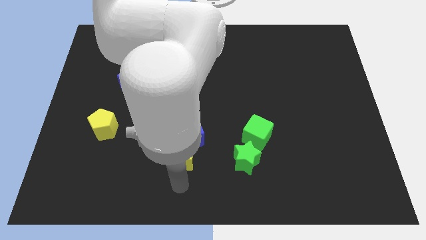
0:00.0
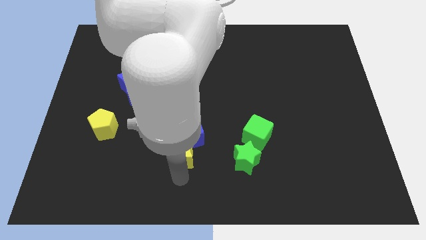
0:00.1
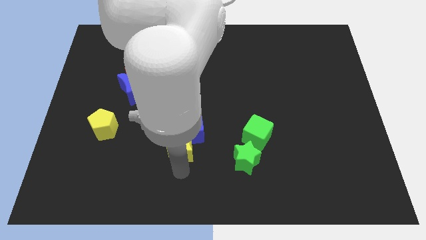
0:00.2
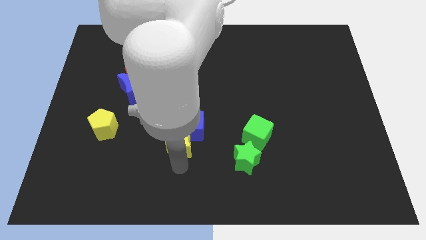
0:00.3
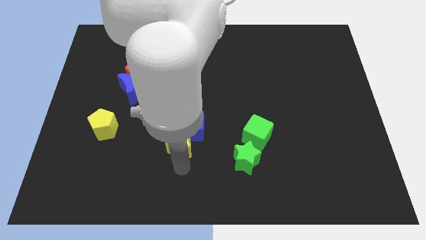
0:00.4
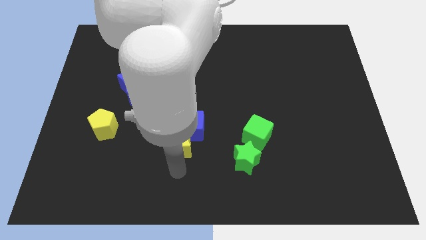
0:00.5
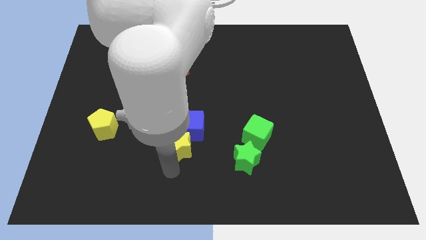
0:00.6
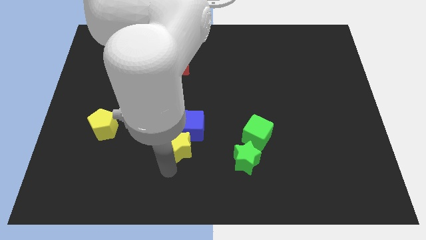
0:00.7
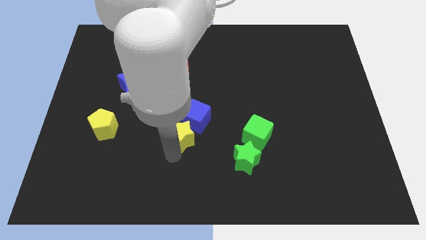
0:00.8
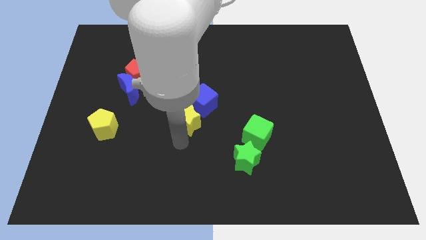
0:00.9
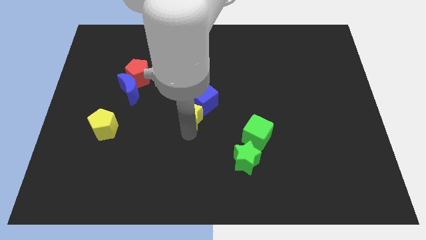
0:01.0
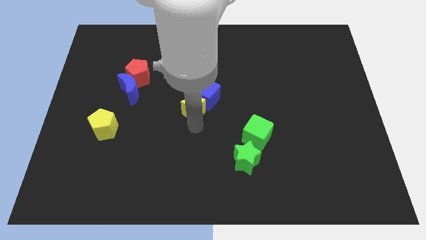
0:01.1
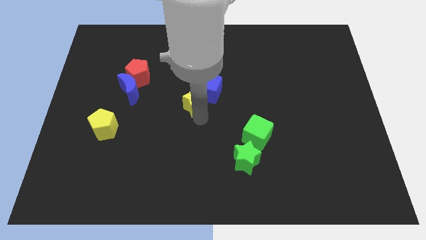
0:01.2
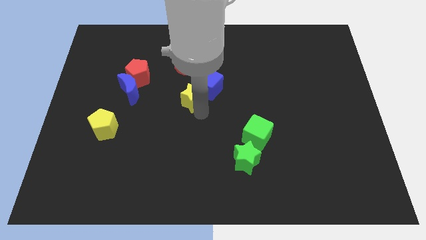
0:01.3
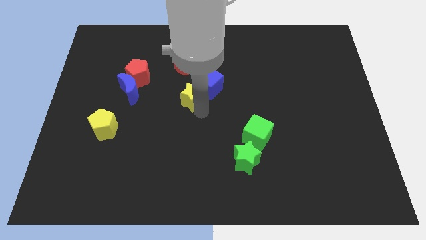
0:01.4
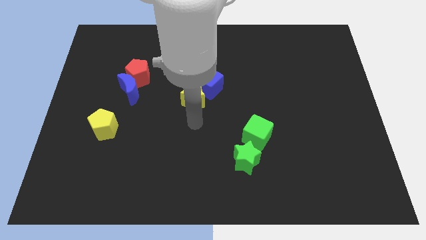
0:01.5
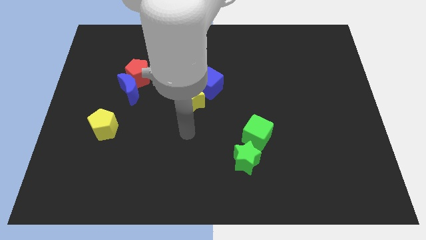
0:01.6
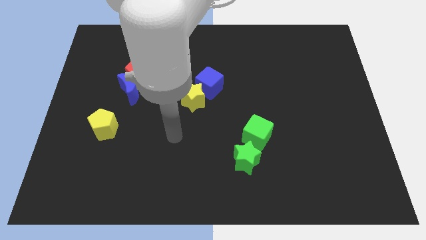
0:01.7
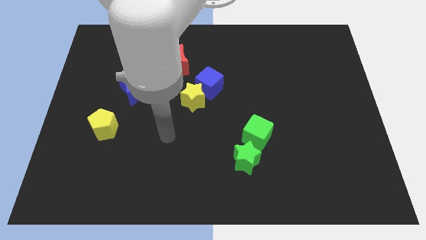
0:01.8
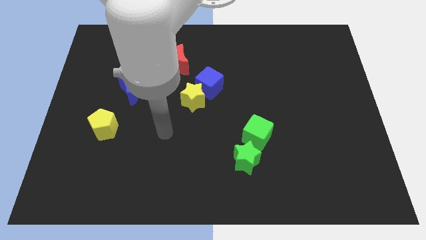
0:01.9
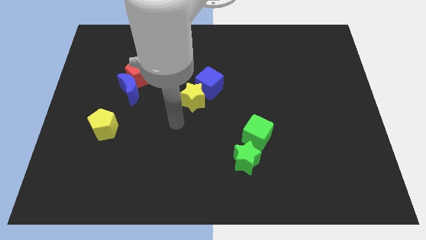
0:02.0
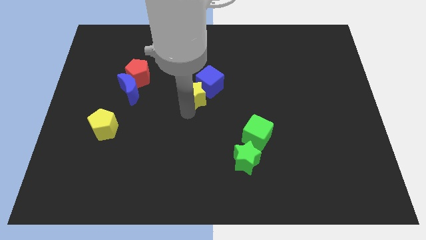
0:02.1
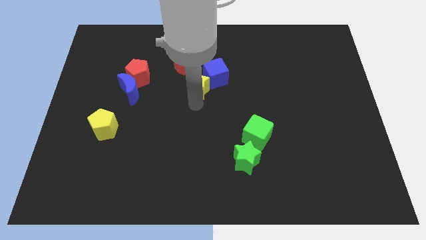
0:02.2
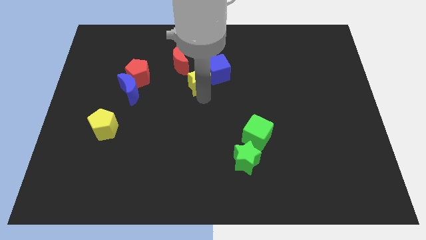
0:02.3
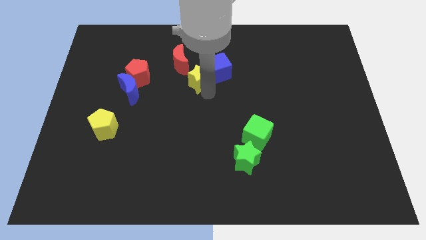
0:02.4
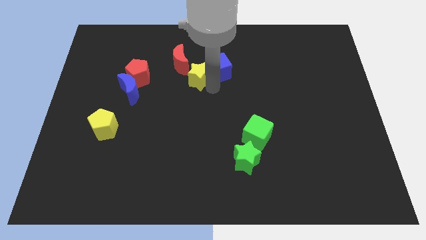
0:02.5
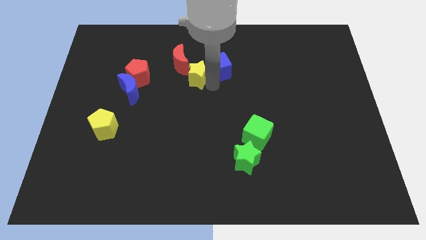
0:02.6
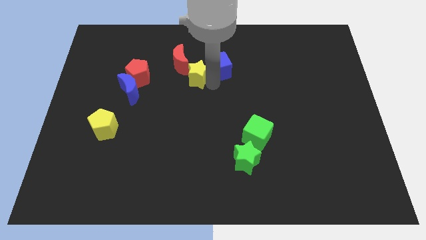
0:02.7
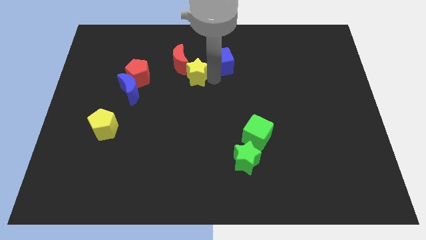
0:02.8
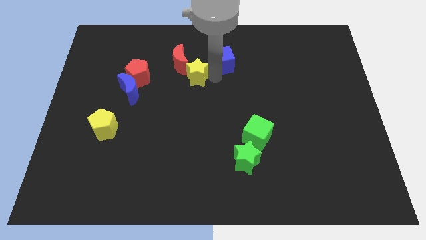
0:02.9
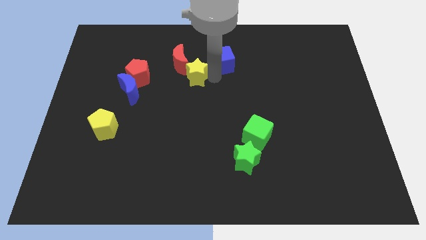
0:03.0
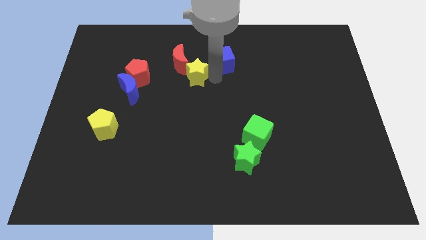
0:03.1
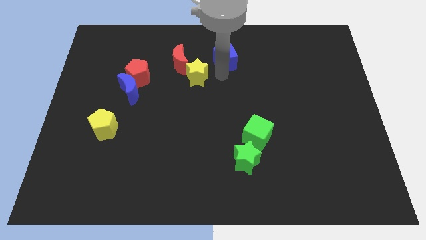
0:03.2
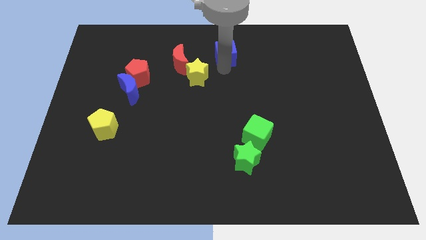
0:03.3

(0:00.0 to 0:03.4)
push the yellow star and blue cube to the top center

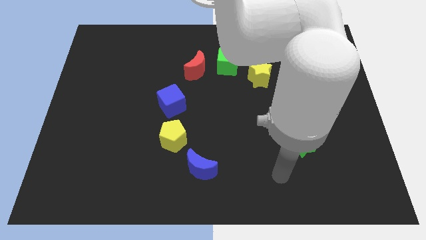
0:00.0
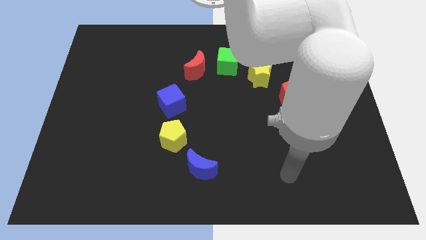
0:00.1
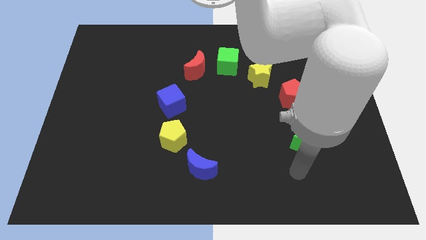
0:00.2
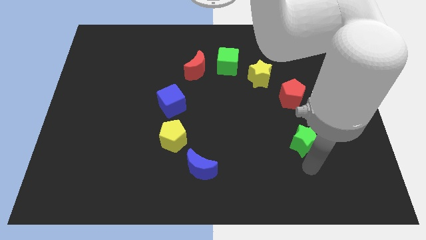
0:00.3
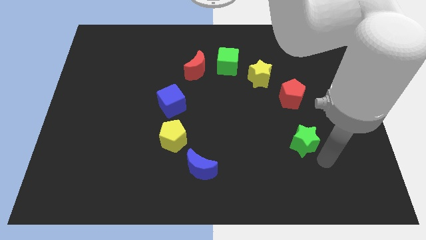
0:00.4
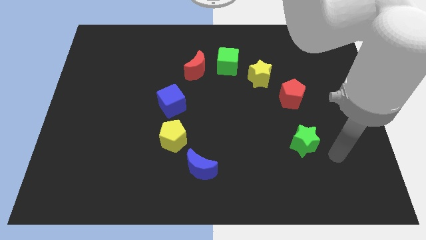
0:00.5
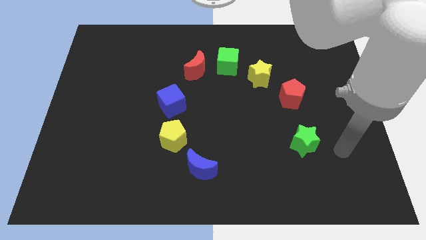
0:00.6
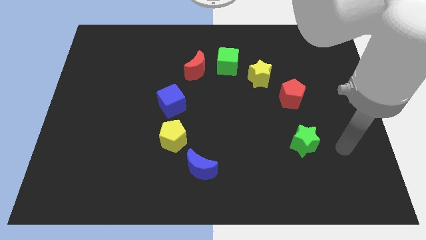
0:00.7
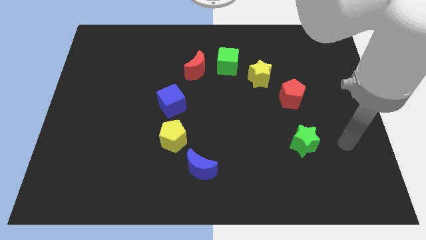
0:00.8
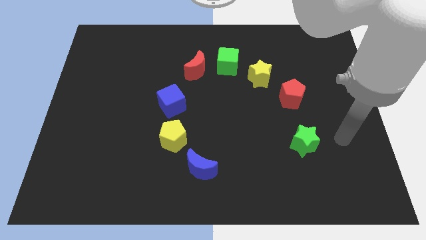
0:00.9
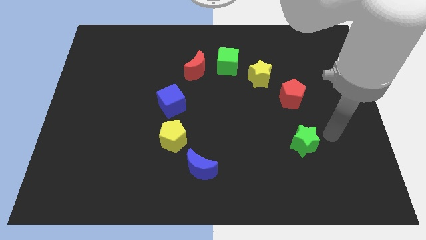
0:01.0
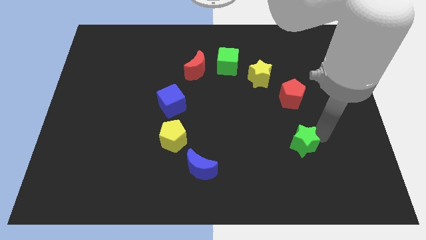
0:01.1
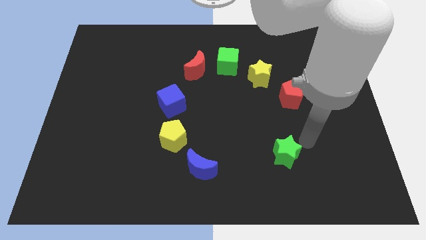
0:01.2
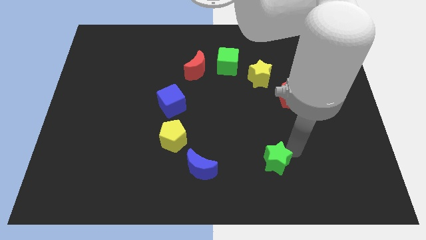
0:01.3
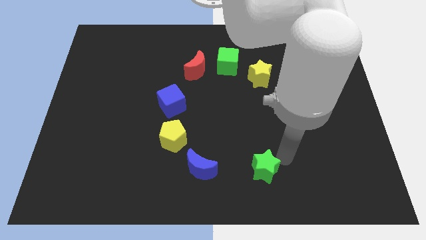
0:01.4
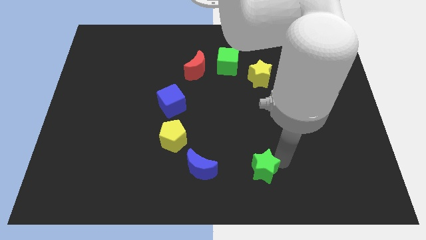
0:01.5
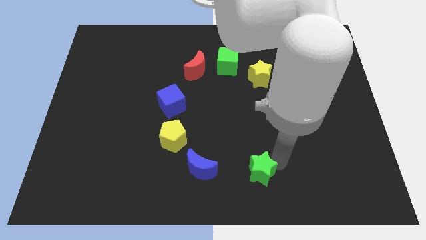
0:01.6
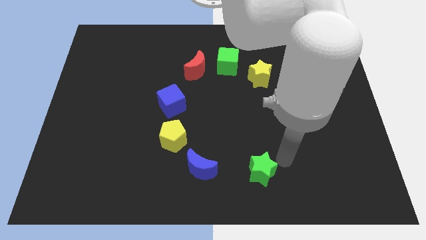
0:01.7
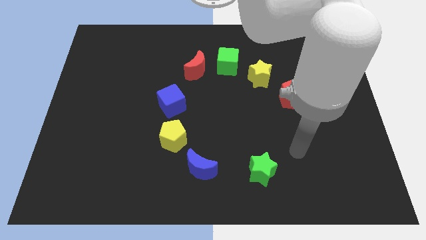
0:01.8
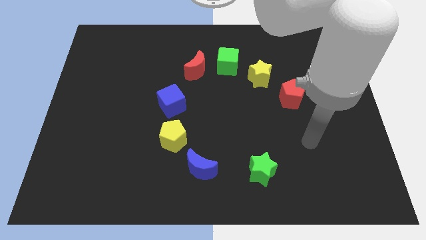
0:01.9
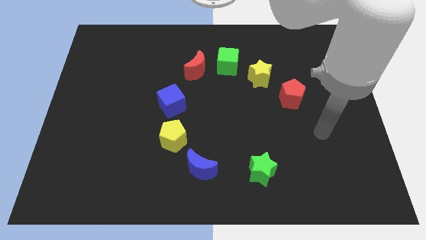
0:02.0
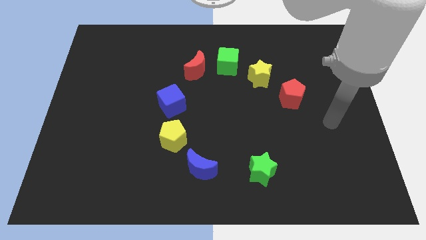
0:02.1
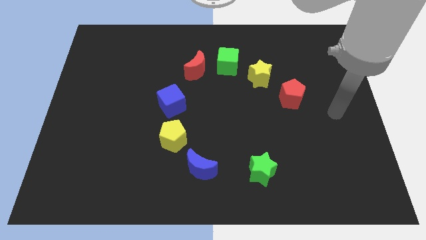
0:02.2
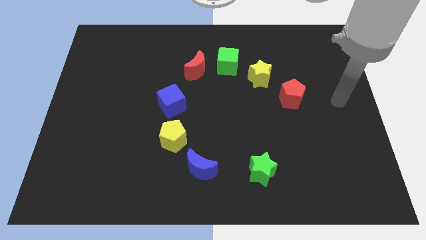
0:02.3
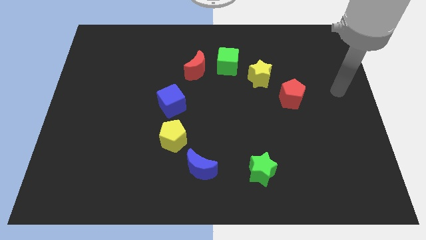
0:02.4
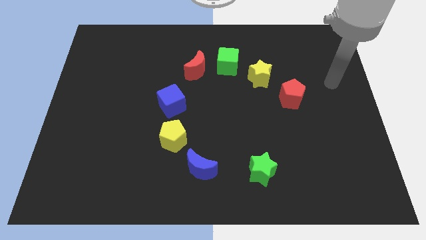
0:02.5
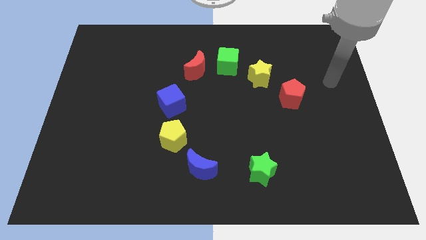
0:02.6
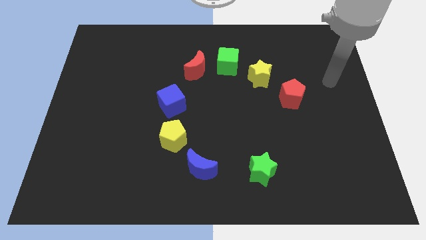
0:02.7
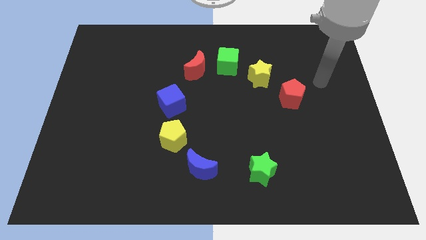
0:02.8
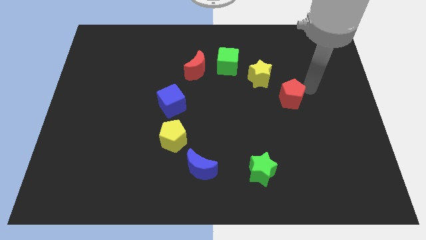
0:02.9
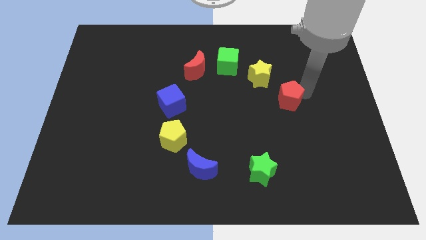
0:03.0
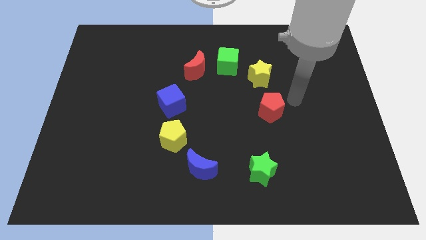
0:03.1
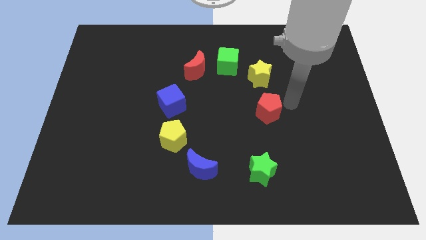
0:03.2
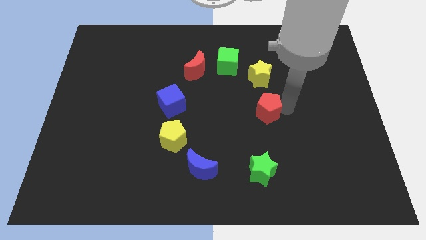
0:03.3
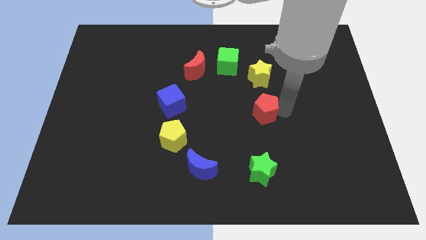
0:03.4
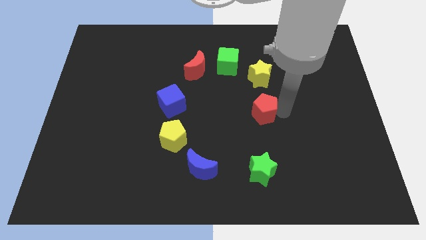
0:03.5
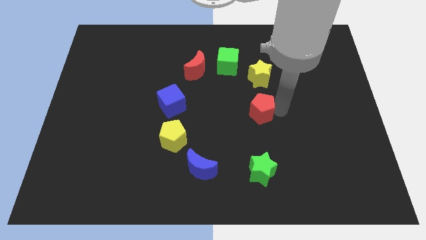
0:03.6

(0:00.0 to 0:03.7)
push red pentagon below yellow star

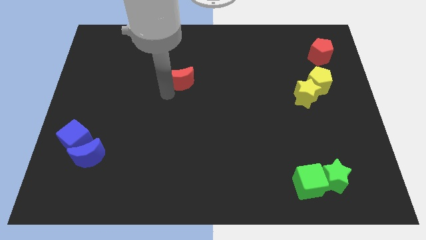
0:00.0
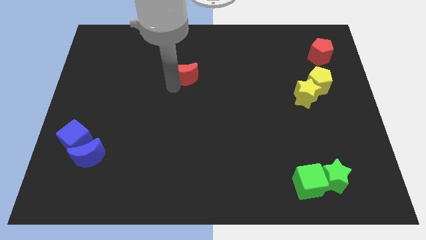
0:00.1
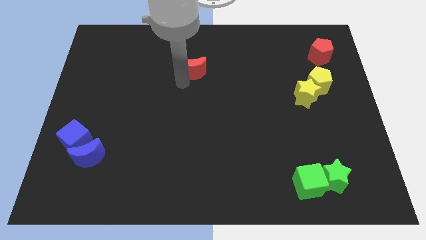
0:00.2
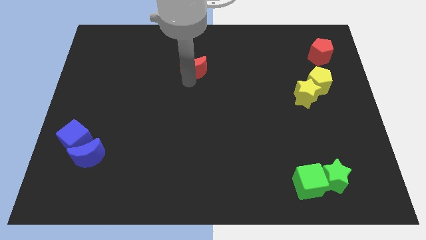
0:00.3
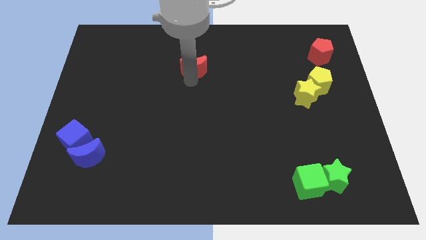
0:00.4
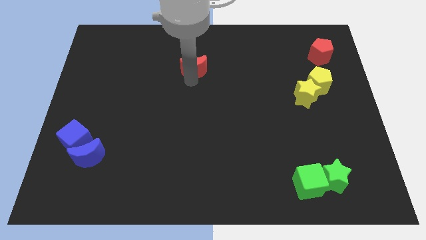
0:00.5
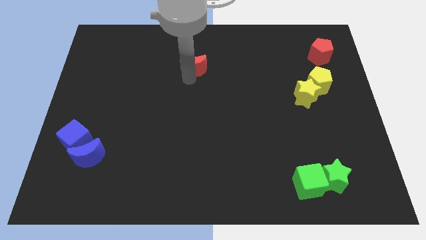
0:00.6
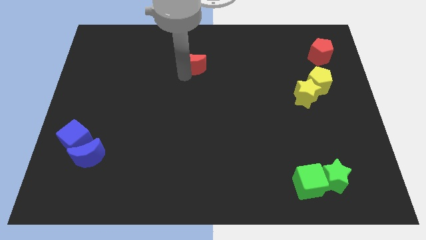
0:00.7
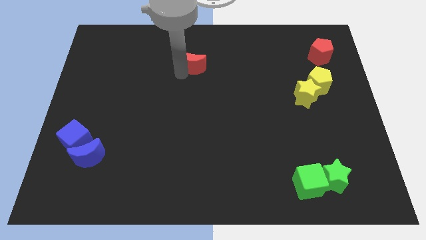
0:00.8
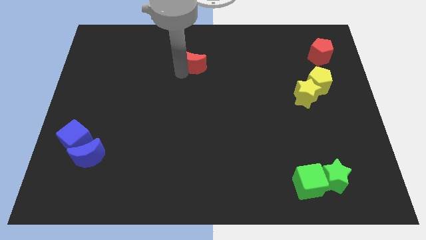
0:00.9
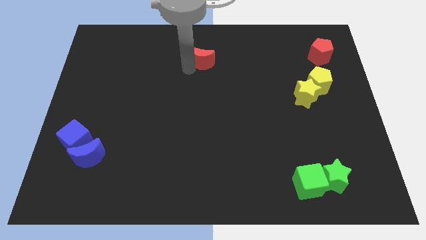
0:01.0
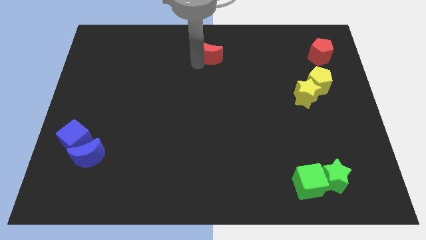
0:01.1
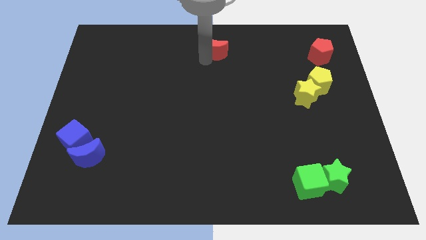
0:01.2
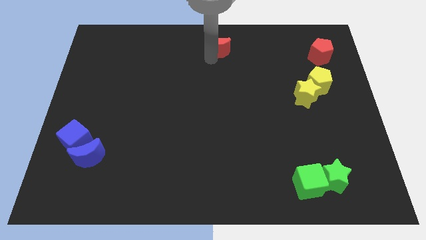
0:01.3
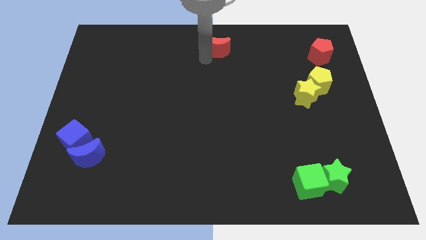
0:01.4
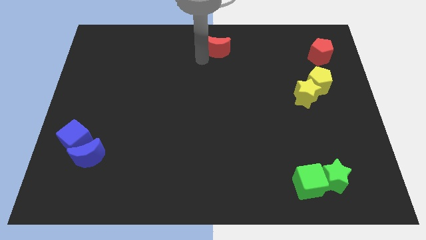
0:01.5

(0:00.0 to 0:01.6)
push rthe ed moon to the top of the board

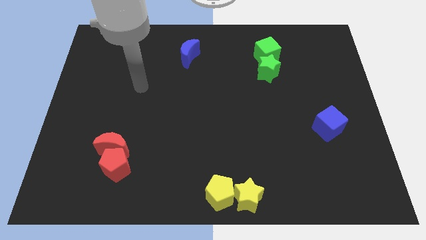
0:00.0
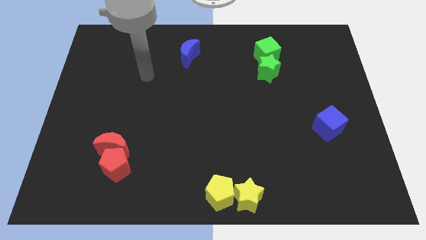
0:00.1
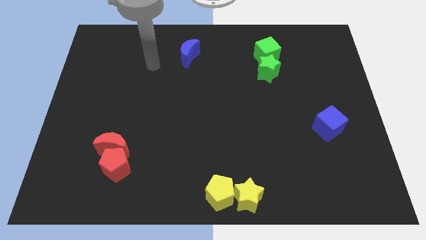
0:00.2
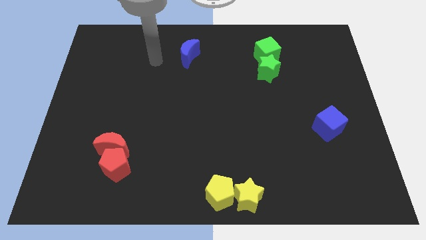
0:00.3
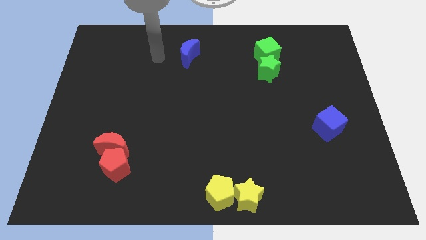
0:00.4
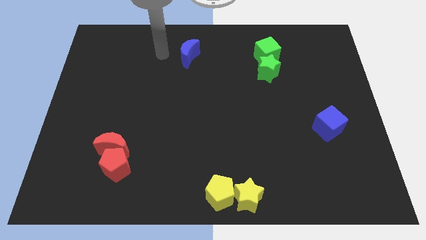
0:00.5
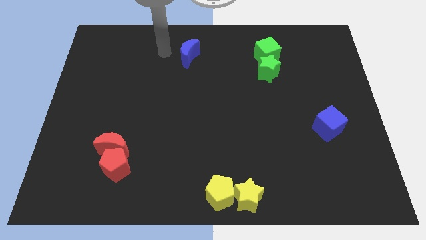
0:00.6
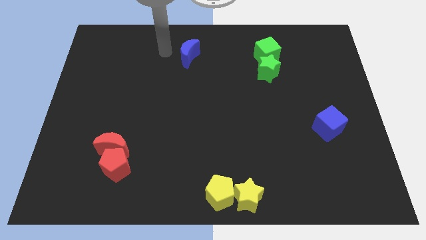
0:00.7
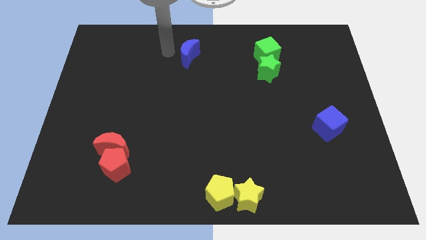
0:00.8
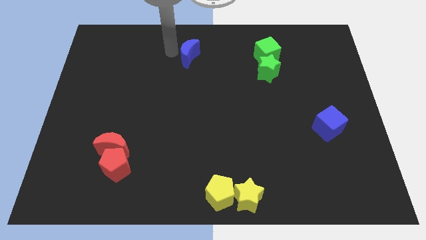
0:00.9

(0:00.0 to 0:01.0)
point the arm to the left of the blue moon
